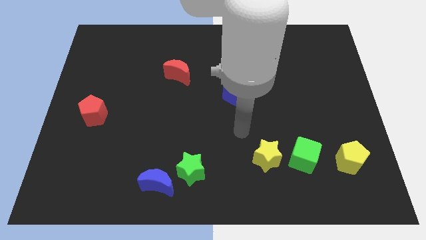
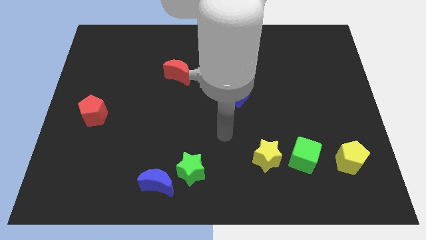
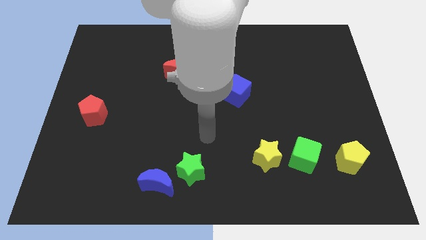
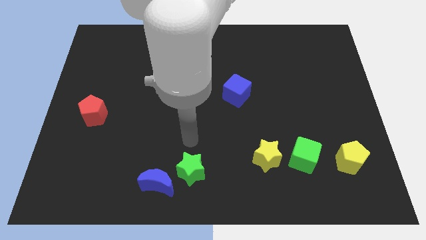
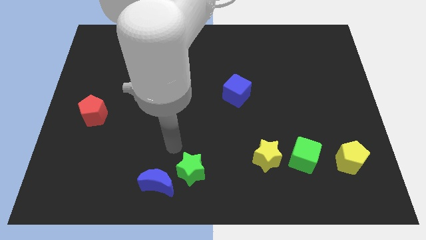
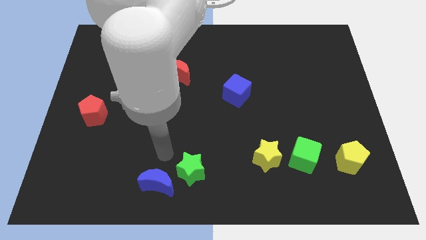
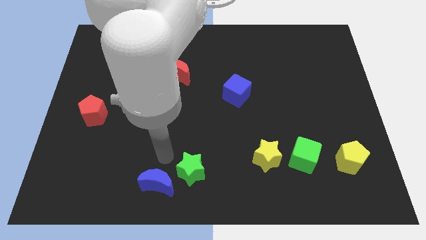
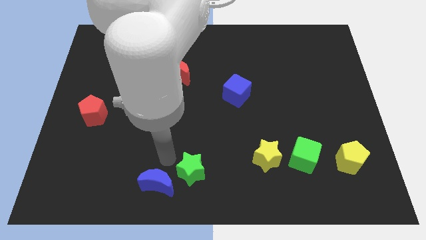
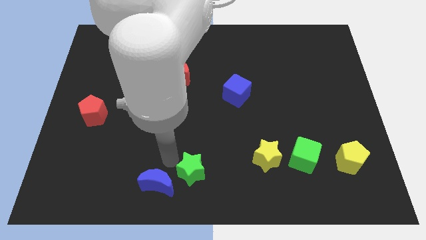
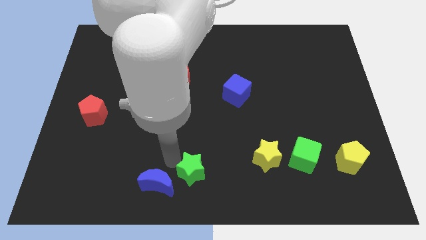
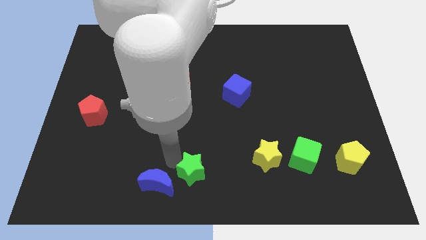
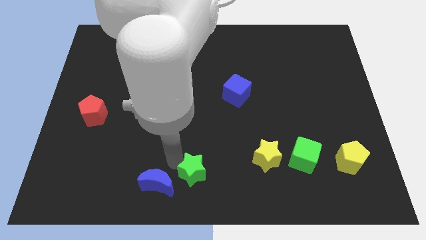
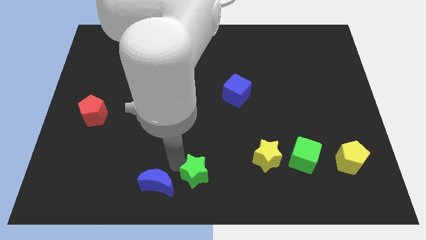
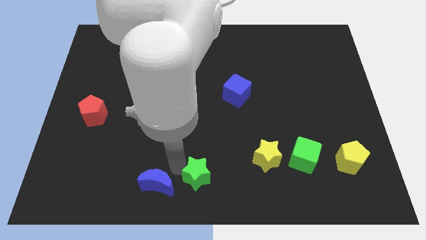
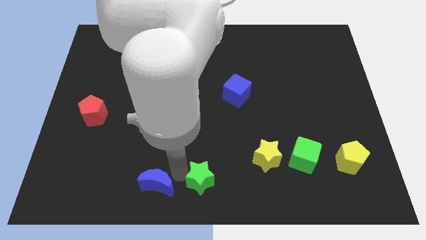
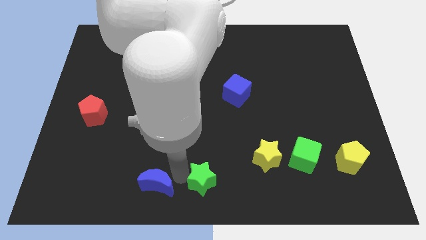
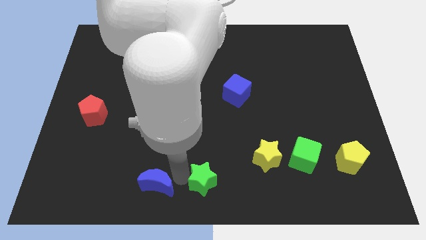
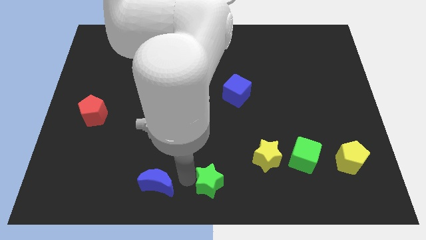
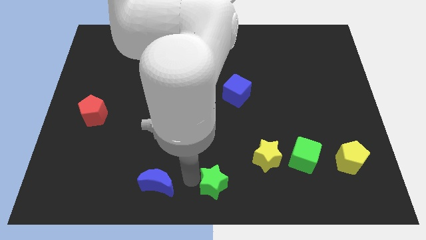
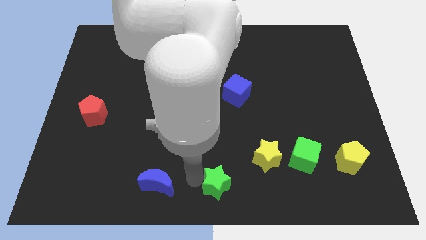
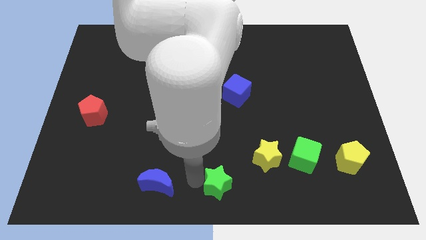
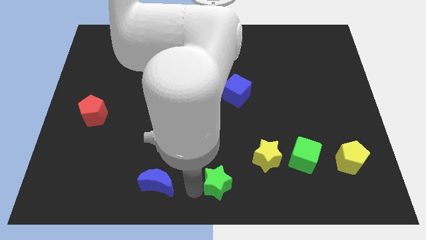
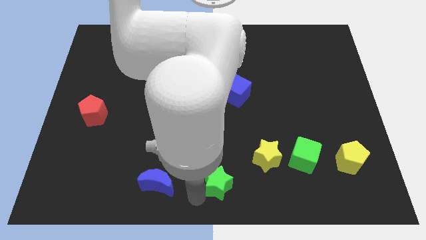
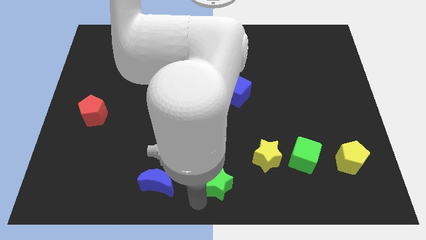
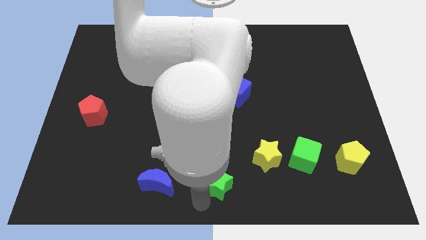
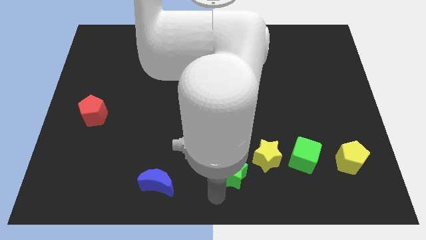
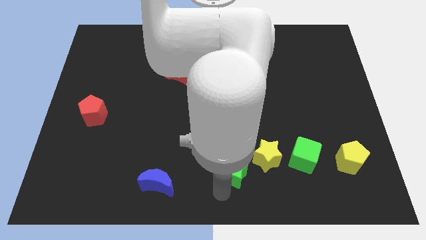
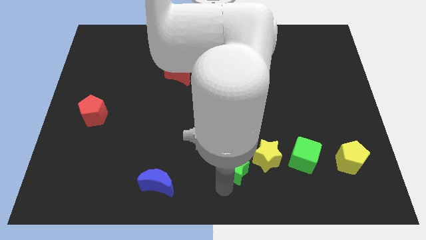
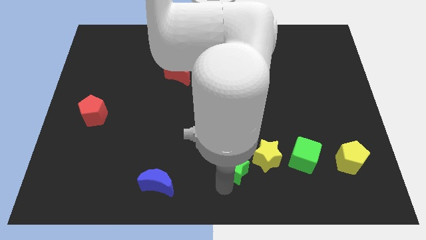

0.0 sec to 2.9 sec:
push the green star close to the yellow star

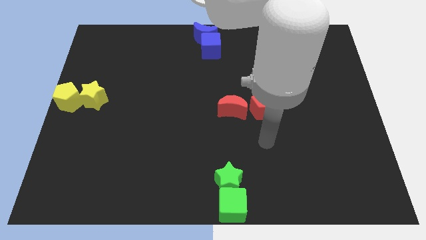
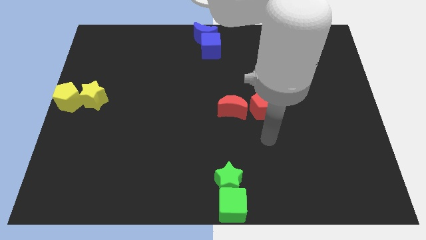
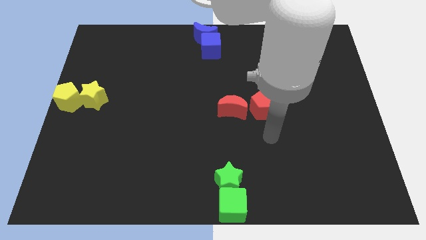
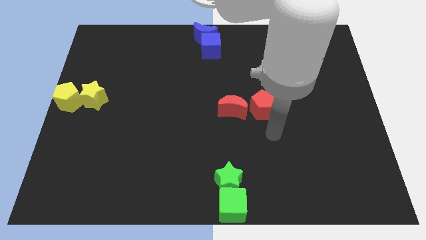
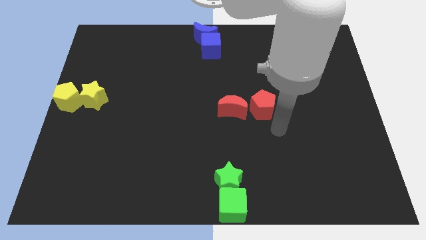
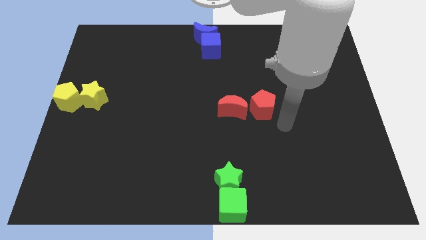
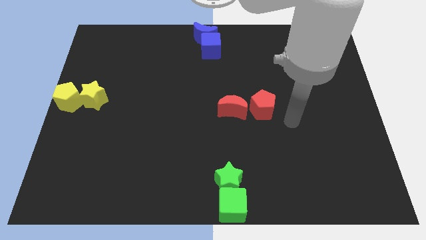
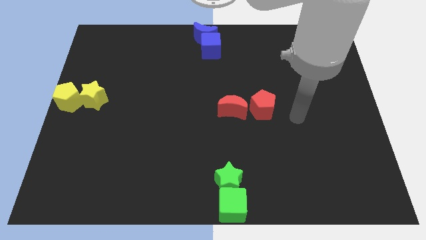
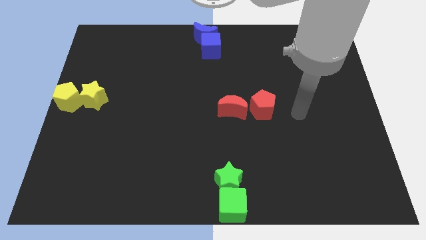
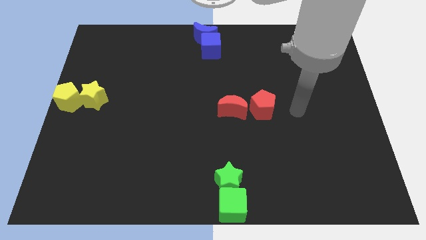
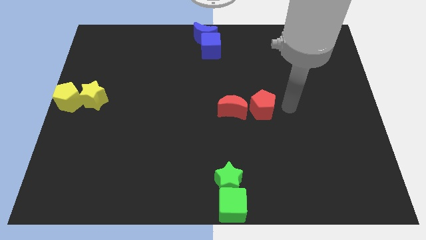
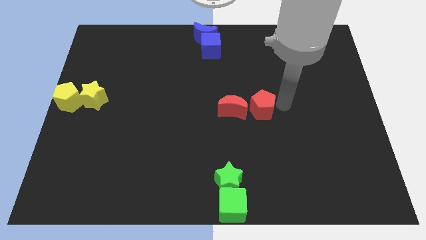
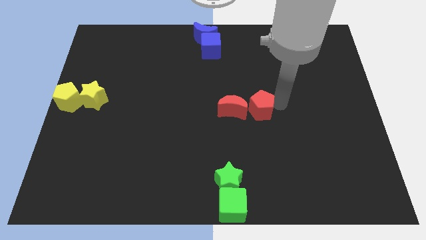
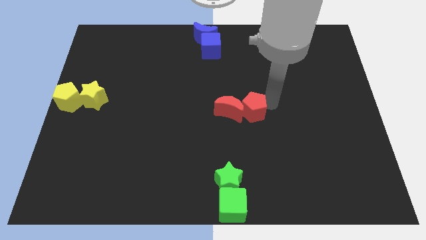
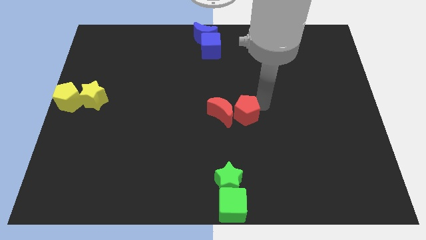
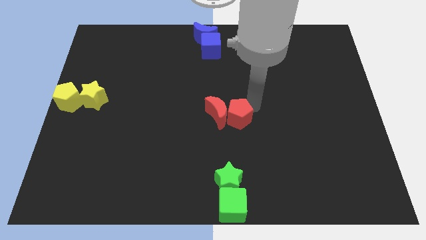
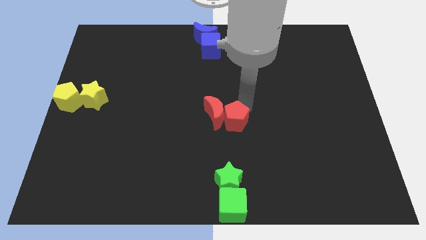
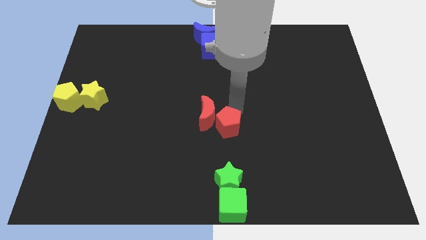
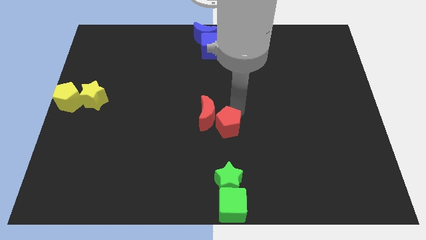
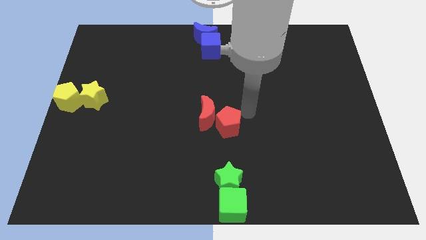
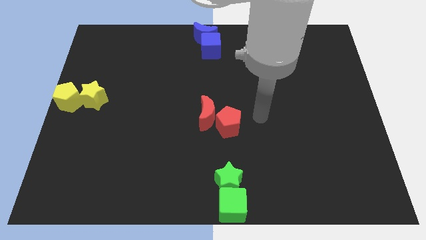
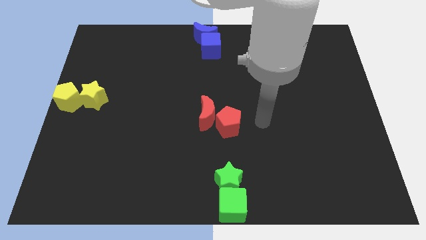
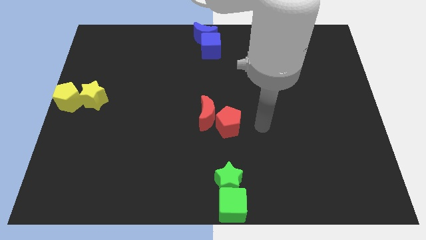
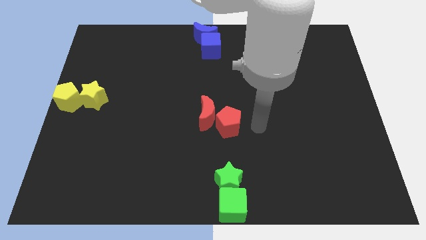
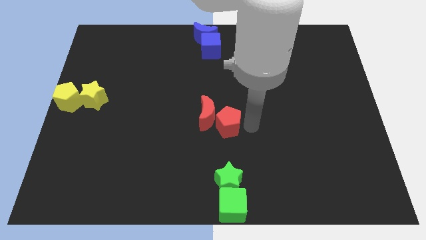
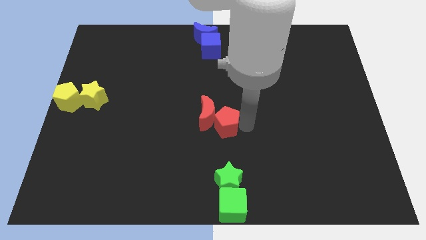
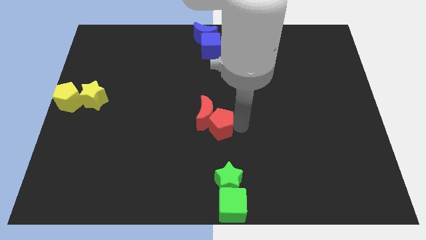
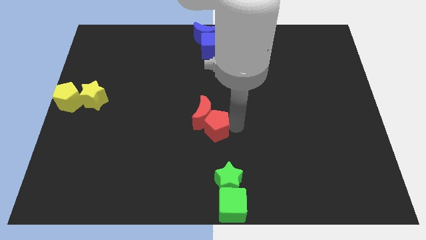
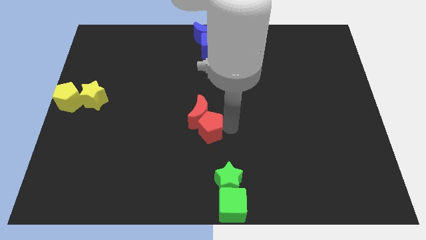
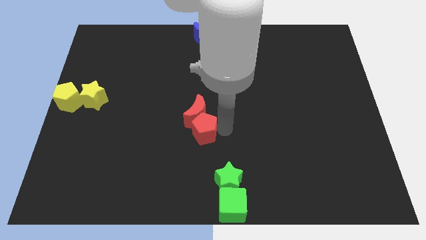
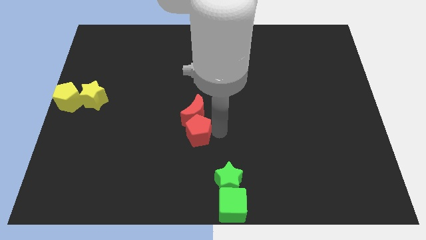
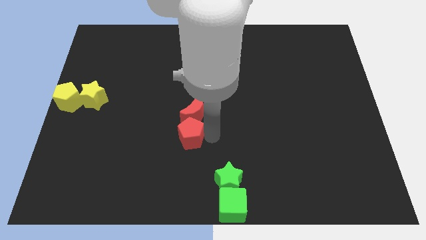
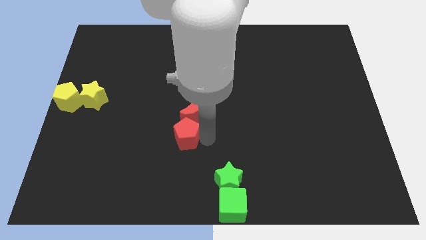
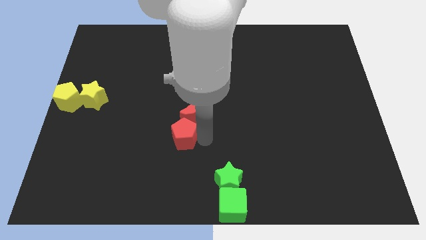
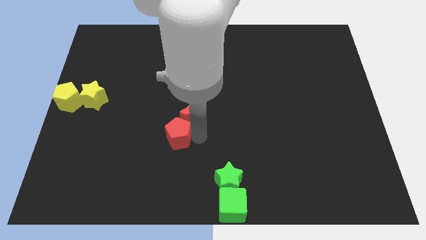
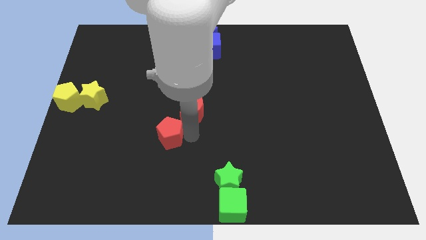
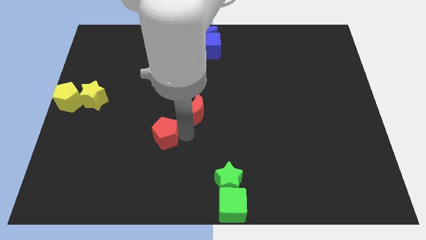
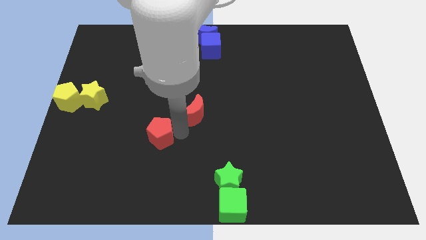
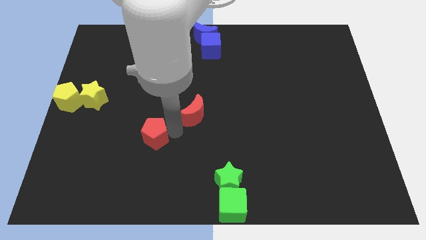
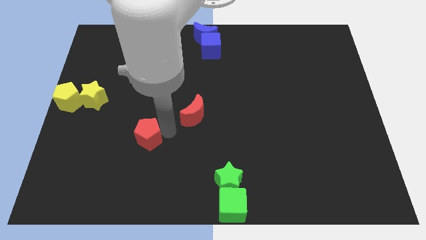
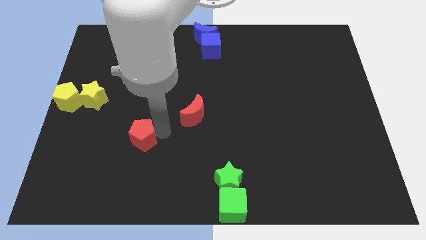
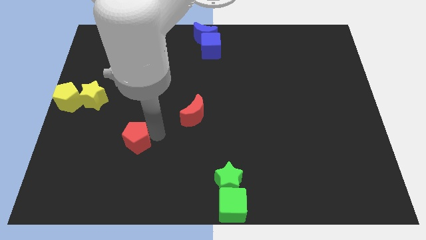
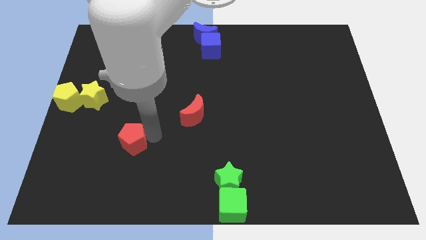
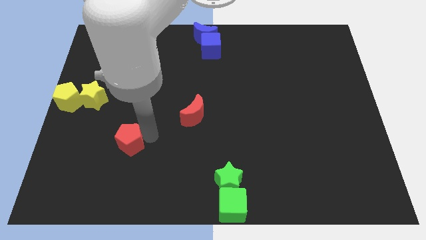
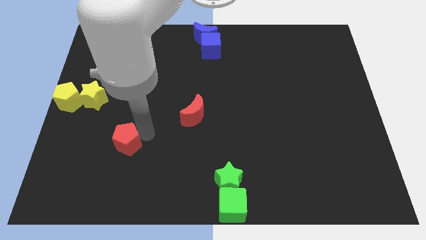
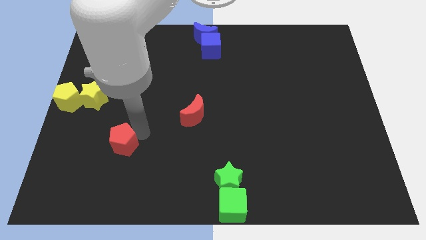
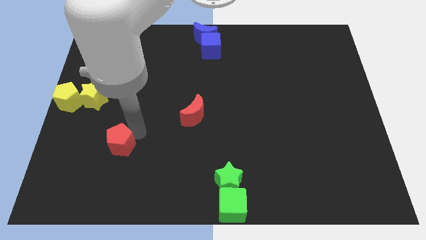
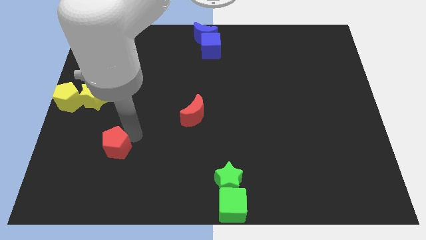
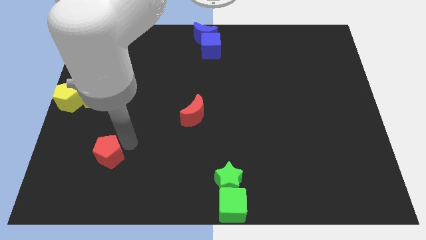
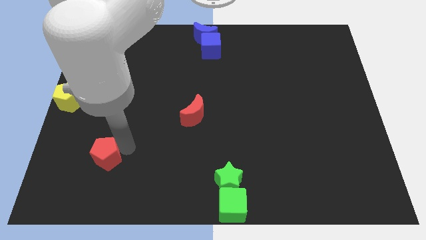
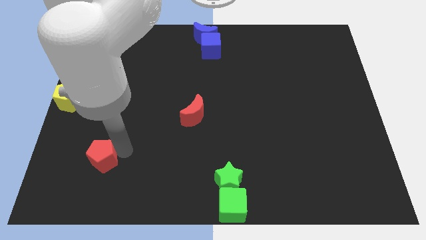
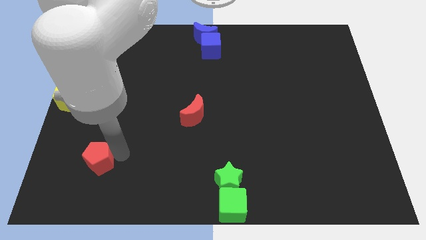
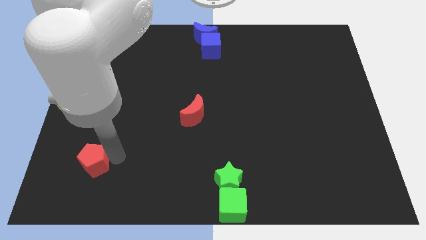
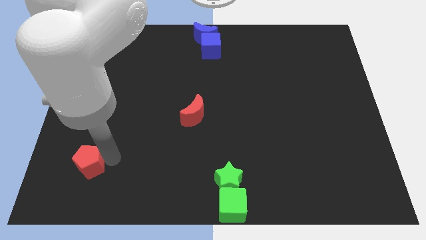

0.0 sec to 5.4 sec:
separate the red pentagon from the red moon

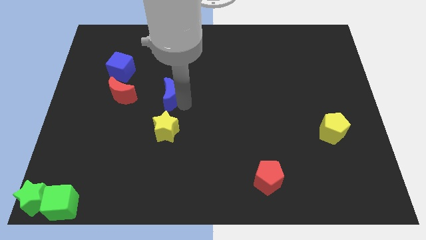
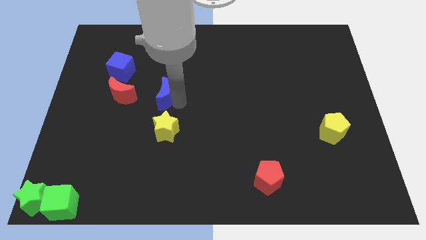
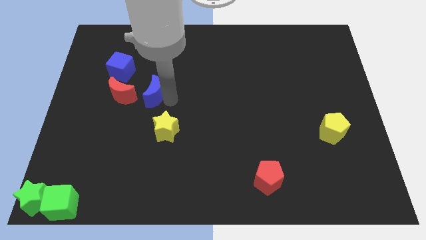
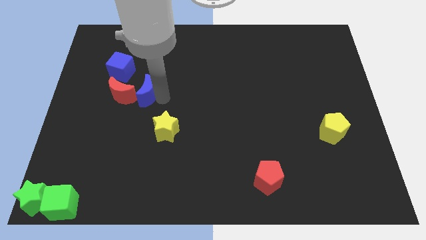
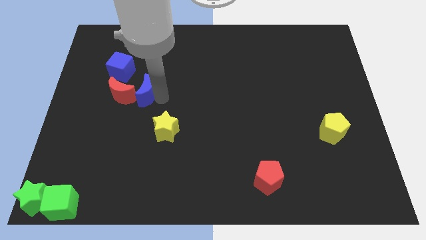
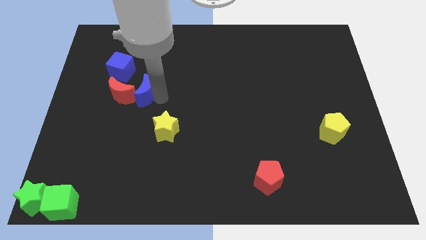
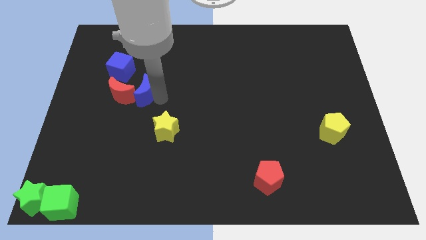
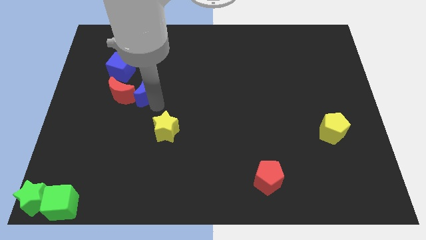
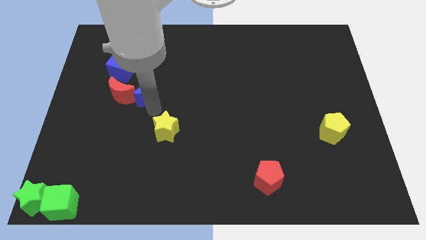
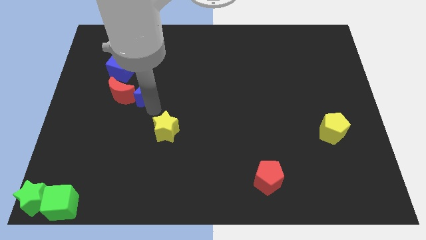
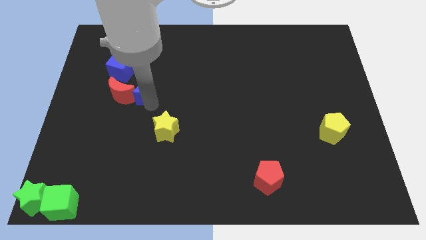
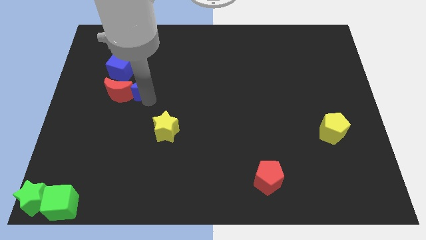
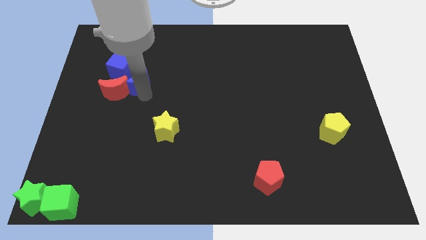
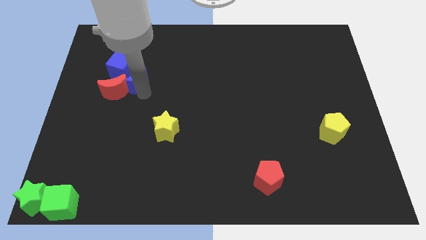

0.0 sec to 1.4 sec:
put the blue moon into the red moon
